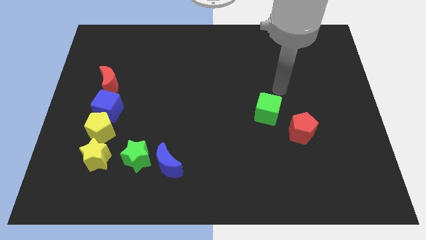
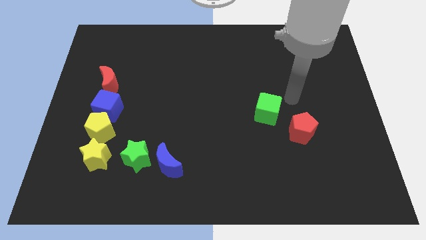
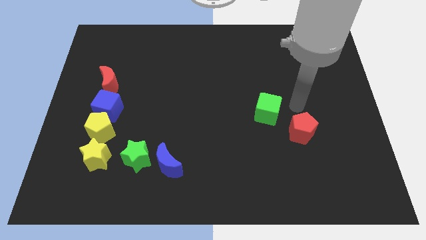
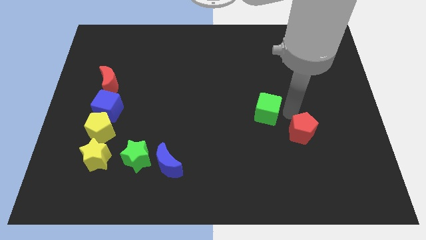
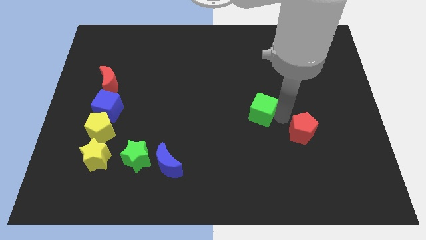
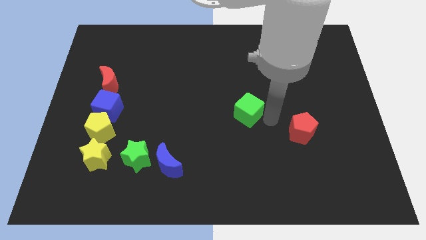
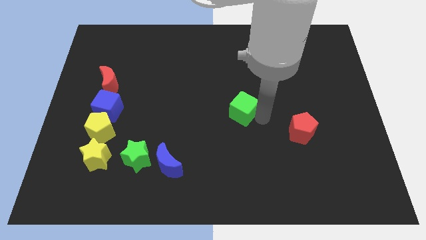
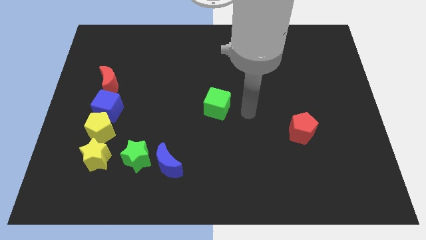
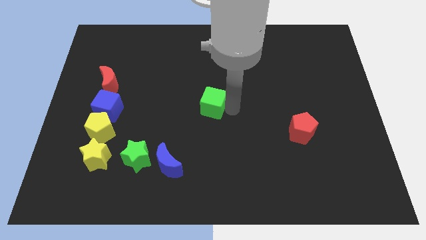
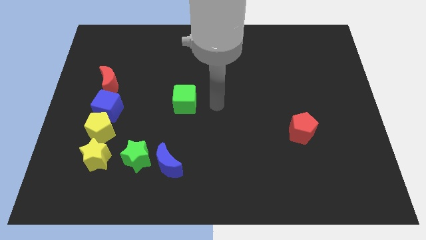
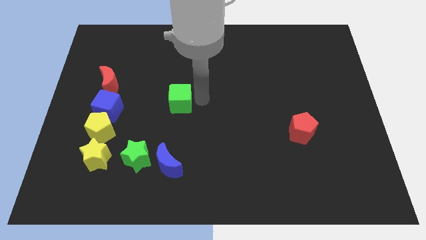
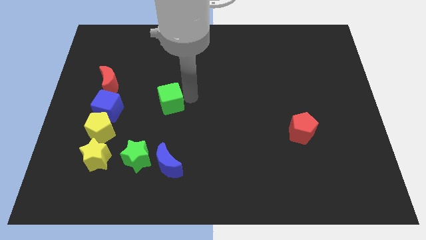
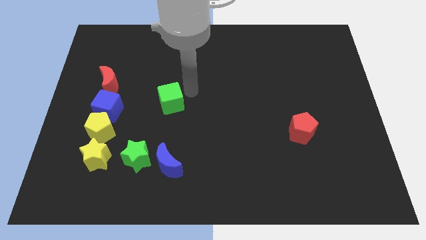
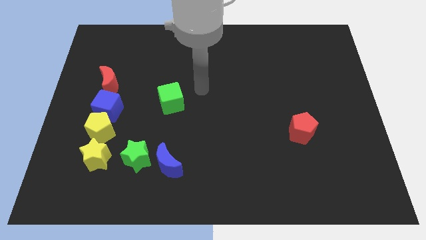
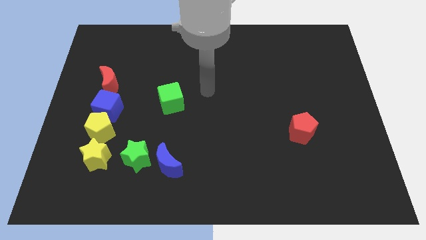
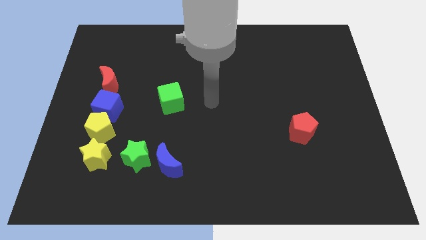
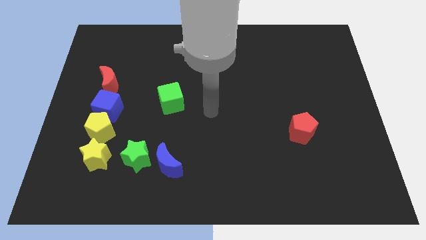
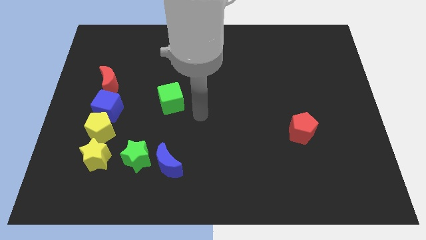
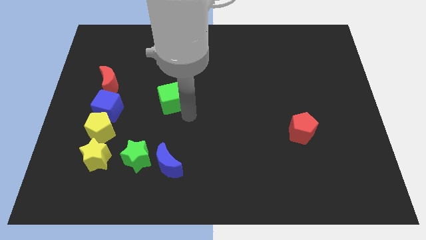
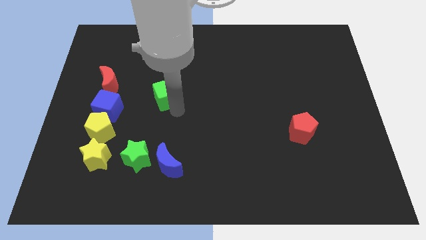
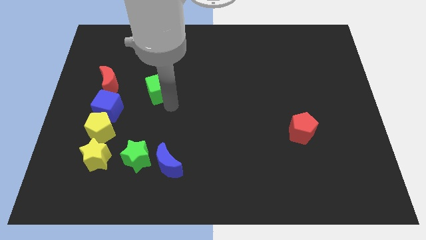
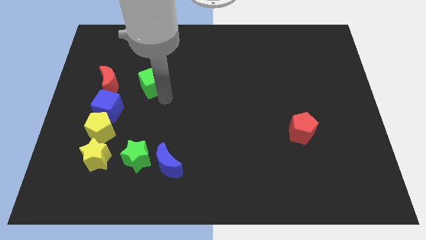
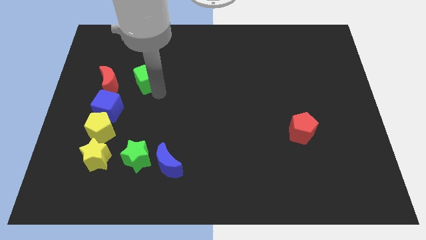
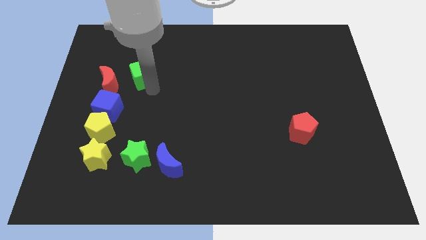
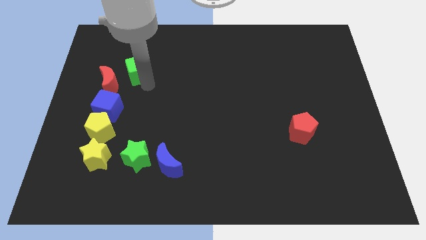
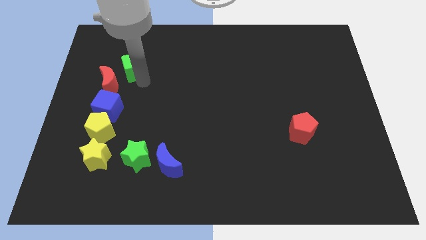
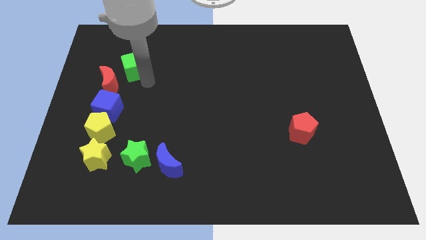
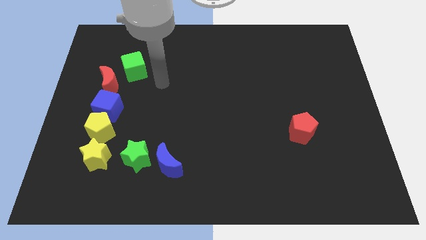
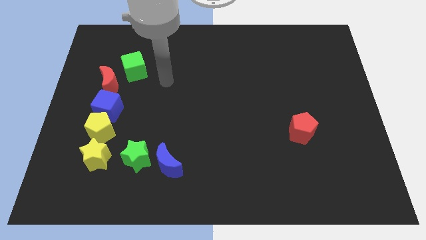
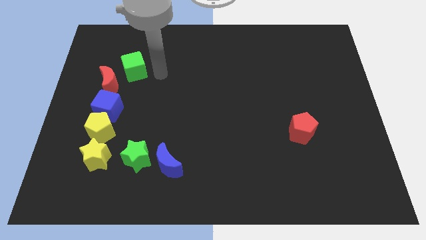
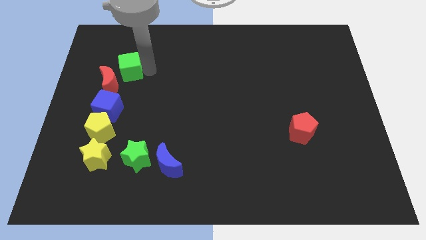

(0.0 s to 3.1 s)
place the green cube to the left center of the board

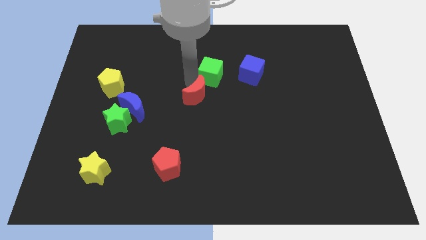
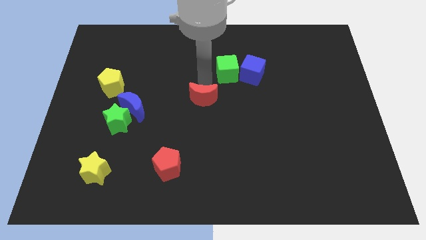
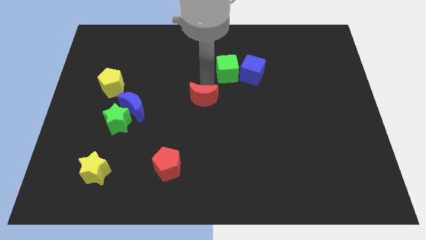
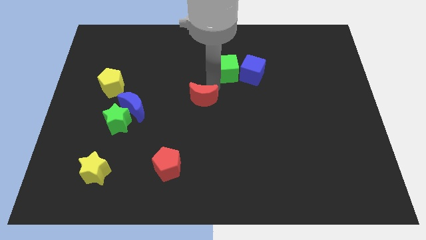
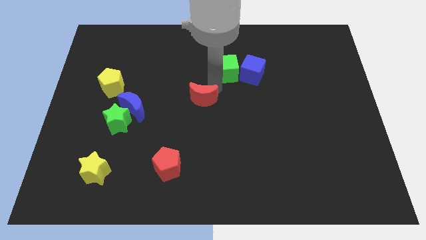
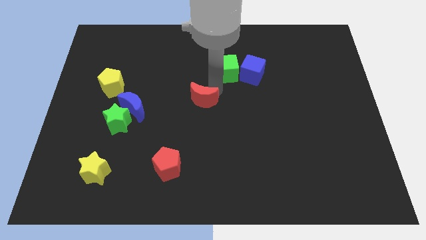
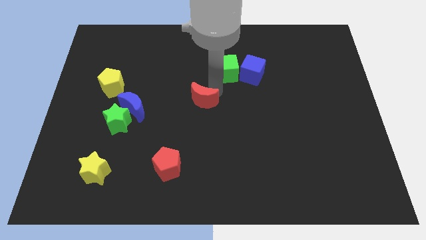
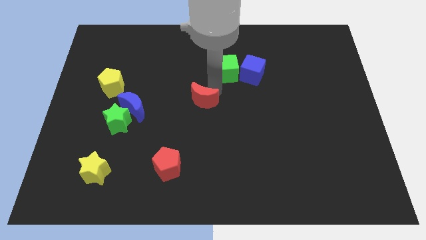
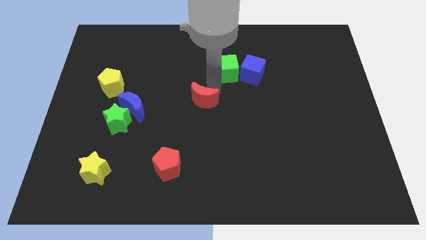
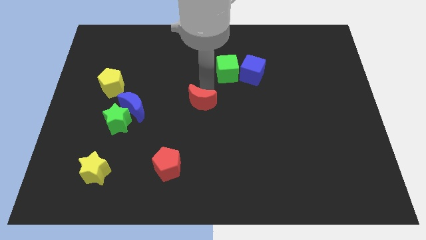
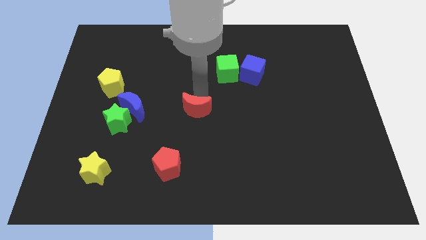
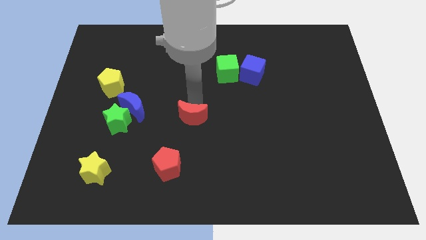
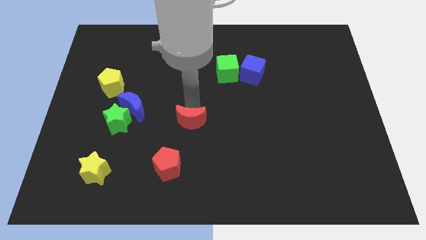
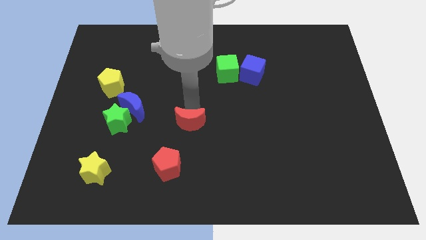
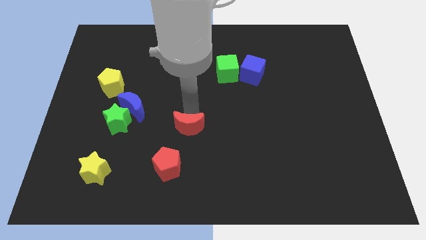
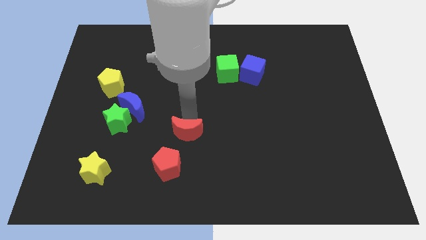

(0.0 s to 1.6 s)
separate red crescent from the green cube

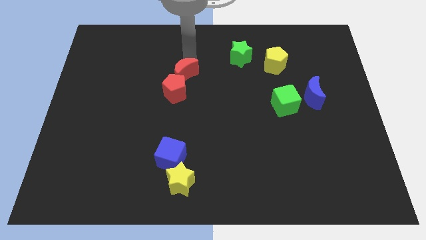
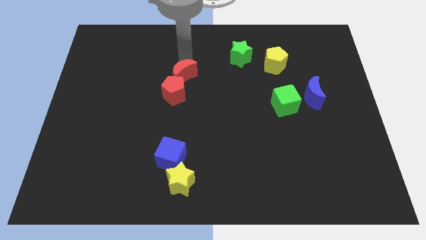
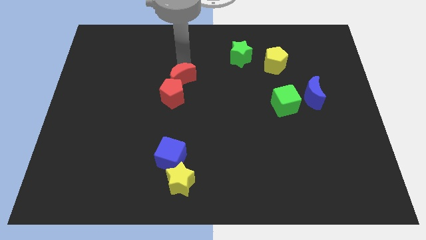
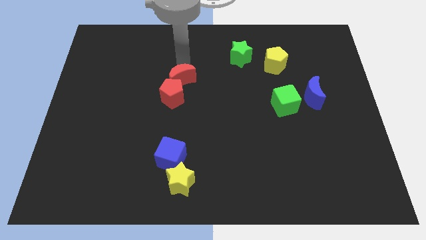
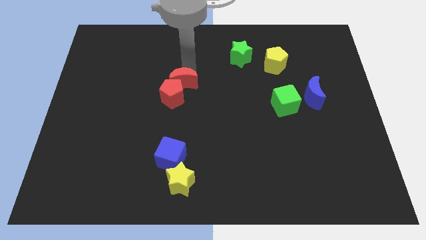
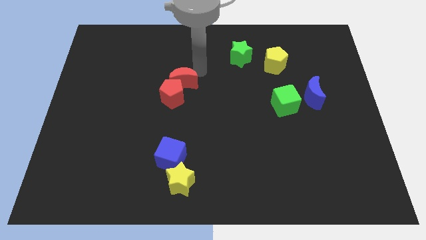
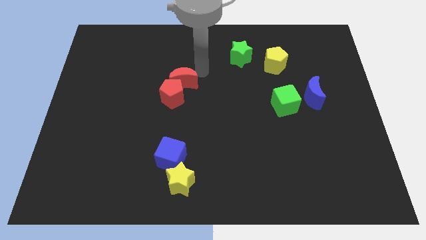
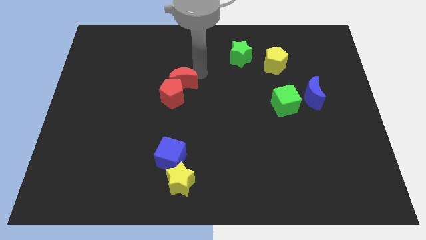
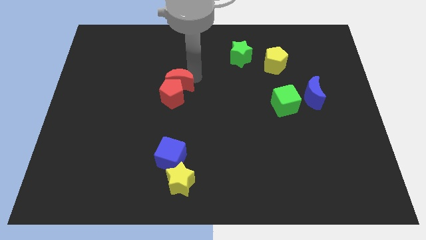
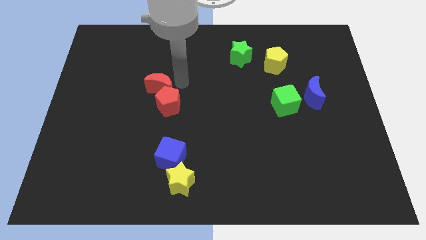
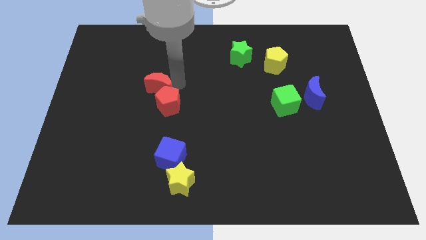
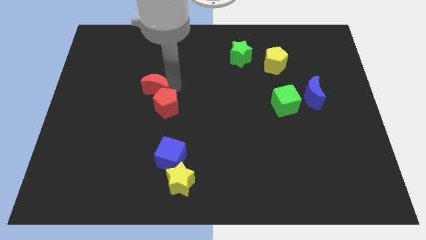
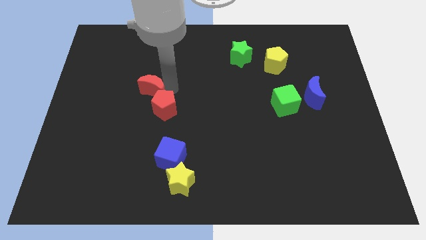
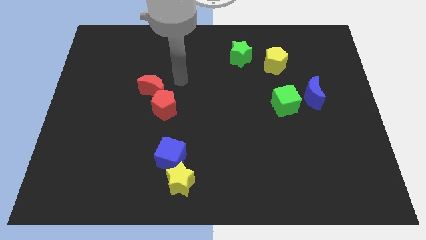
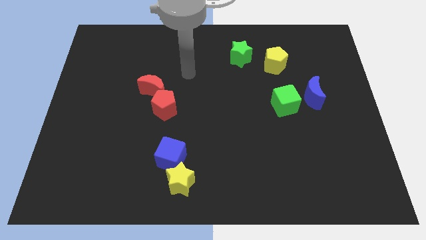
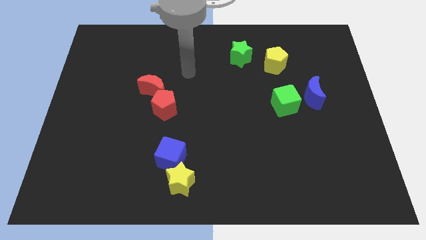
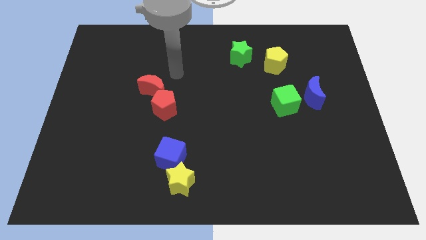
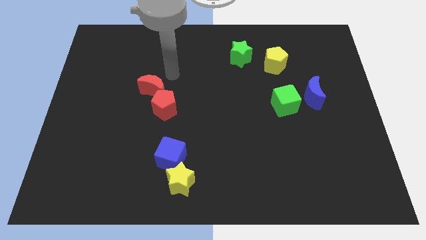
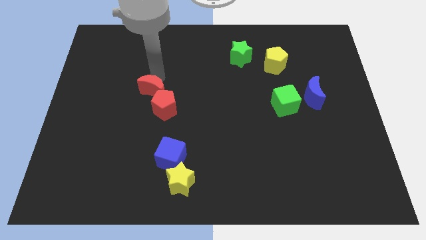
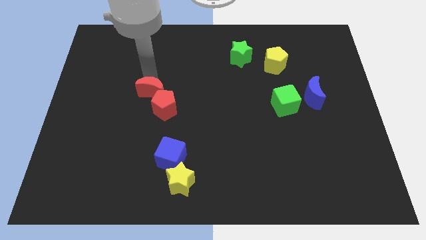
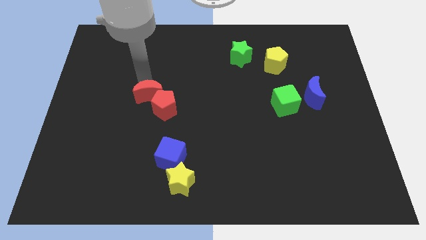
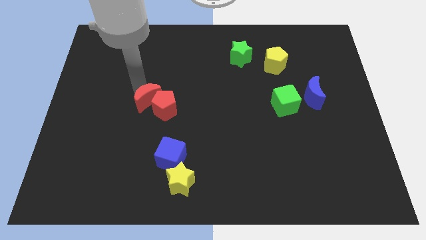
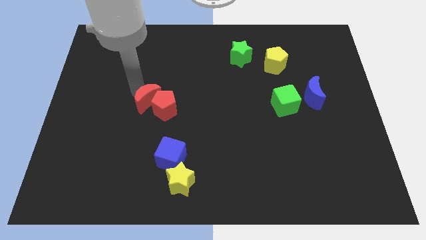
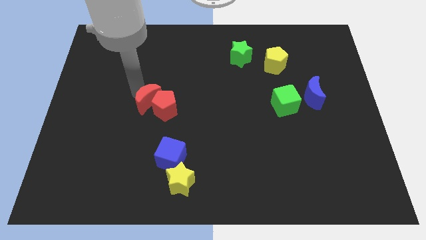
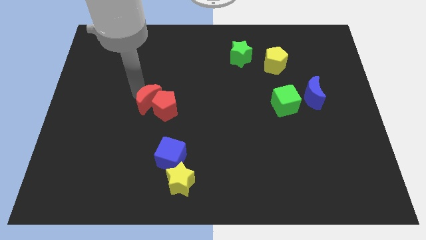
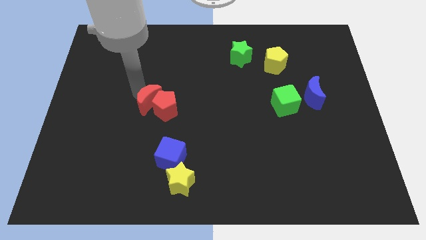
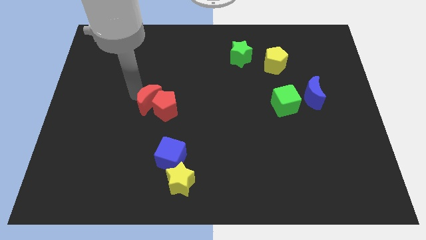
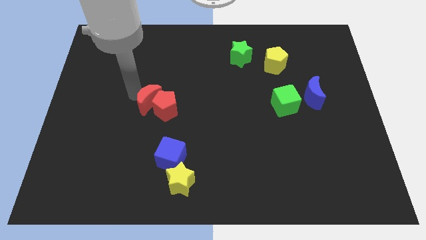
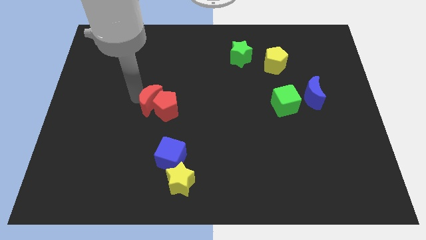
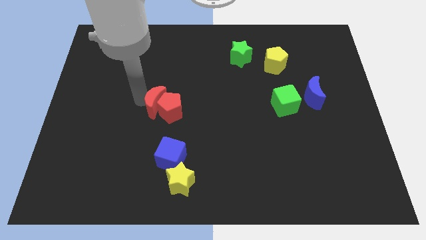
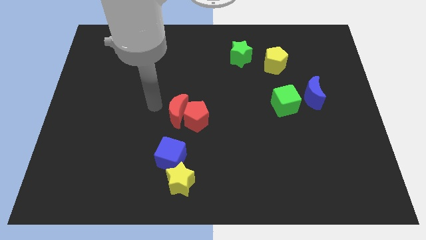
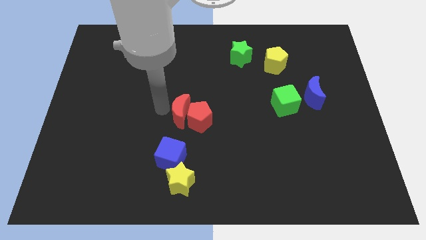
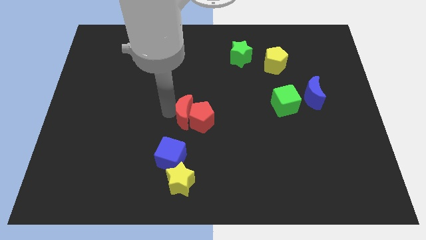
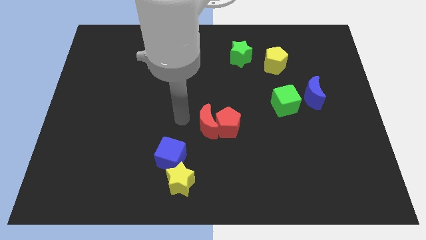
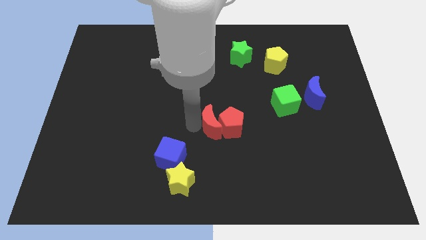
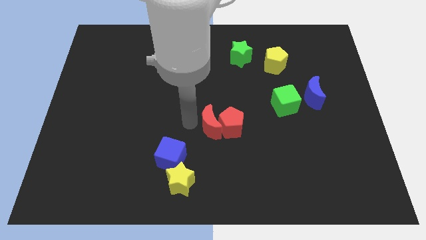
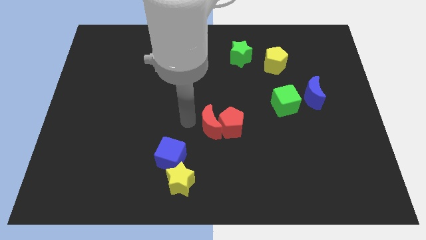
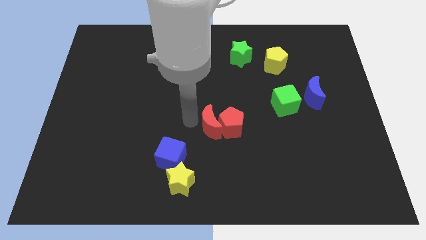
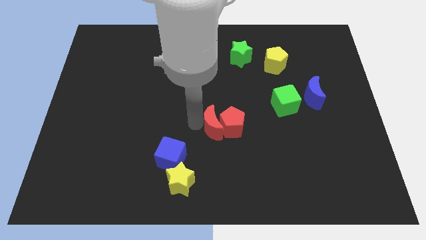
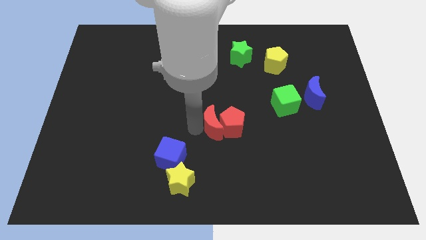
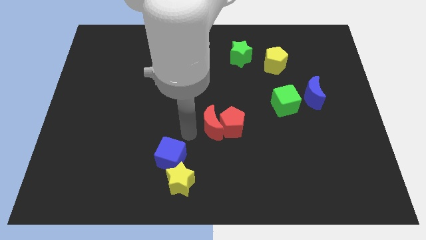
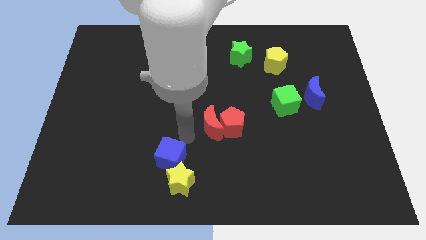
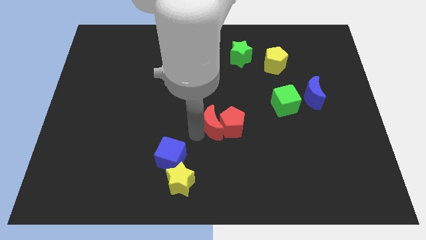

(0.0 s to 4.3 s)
slide the red blocks diagonally top right to the blue cube
